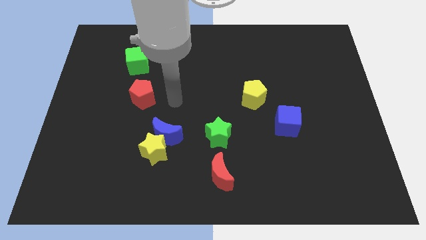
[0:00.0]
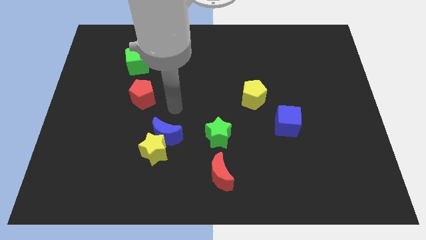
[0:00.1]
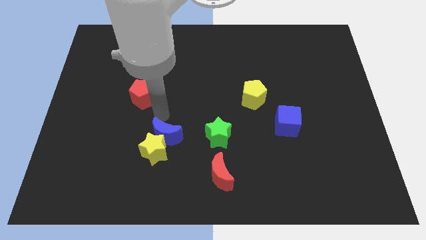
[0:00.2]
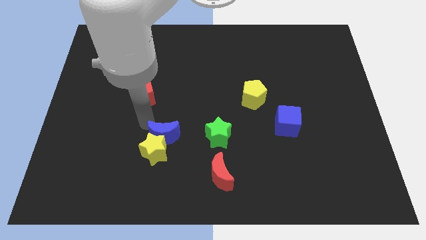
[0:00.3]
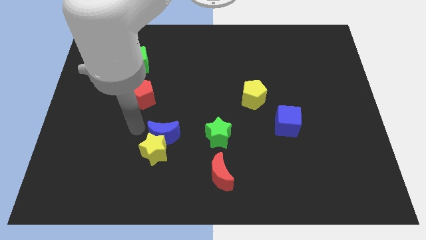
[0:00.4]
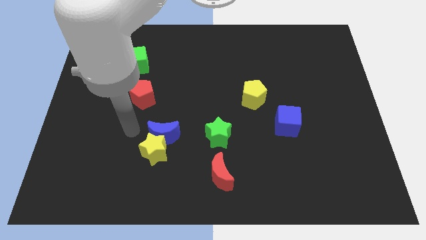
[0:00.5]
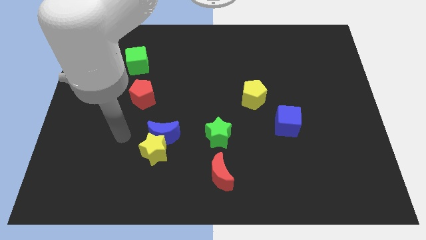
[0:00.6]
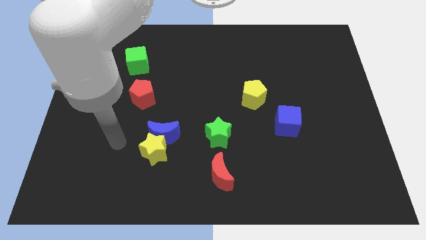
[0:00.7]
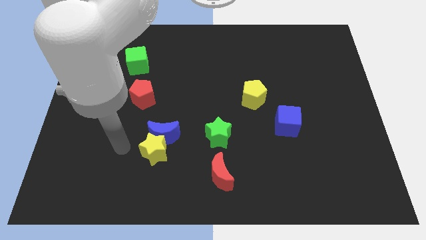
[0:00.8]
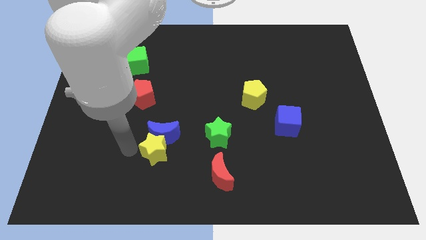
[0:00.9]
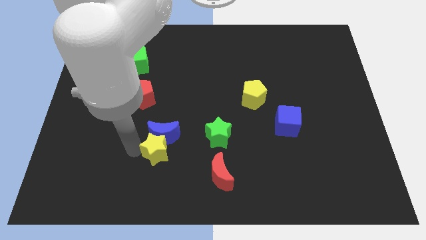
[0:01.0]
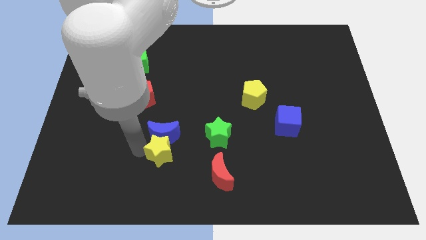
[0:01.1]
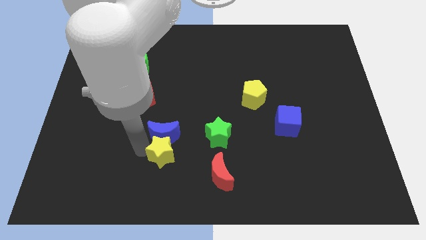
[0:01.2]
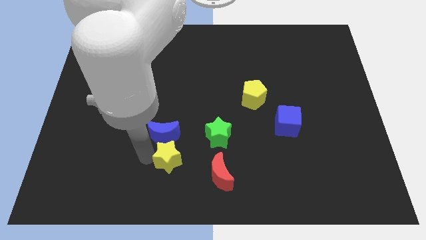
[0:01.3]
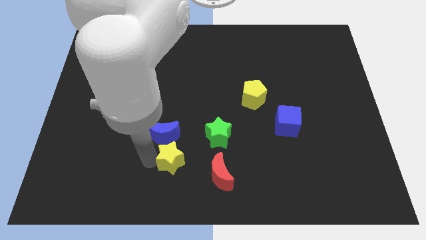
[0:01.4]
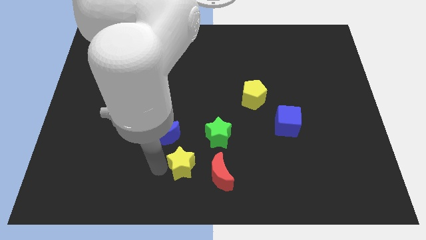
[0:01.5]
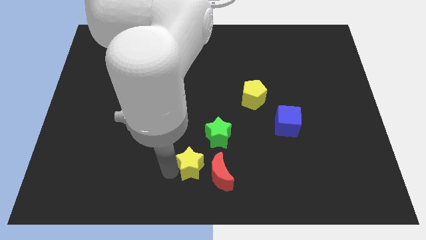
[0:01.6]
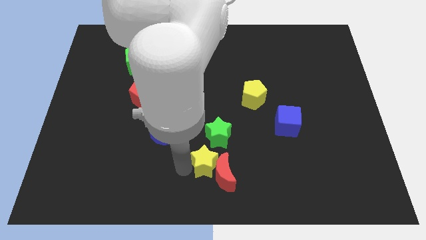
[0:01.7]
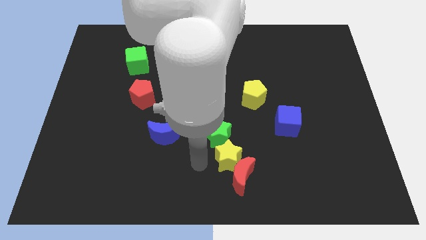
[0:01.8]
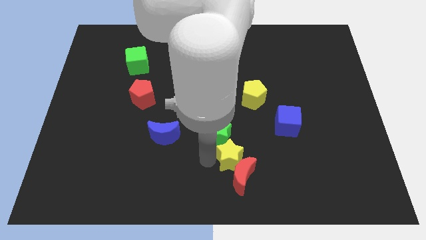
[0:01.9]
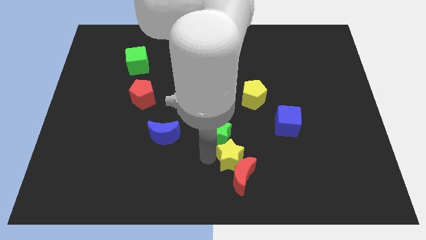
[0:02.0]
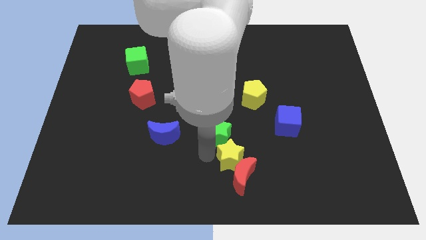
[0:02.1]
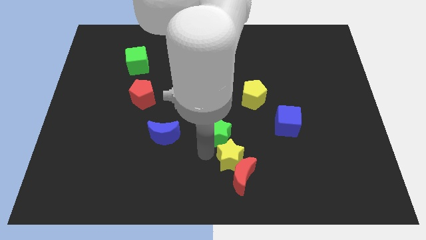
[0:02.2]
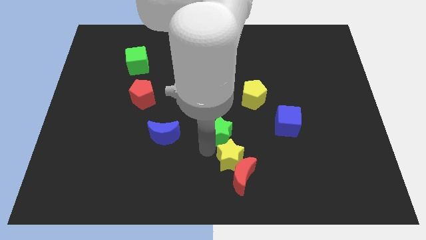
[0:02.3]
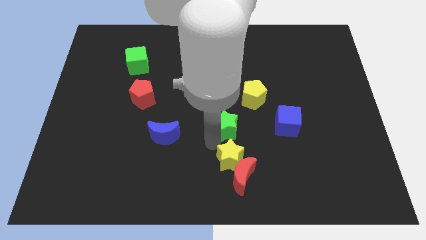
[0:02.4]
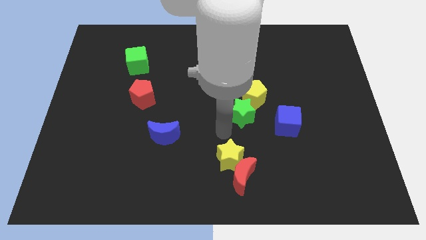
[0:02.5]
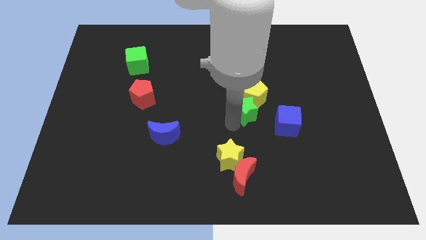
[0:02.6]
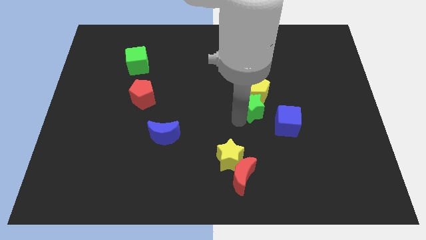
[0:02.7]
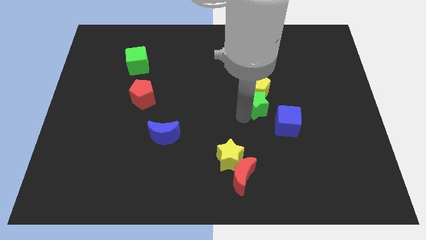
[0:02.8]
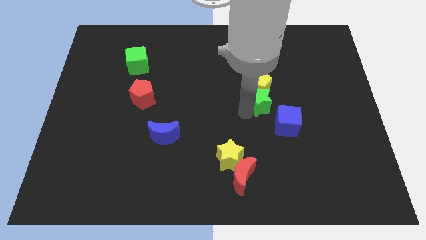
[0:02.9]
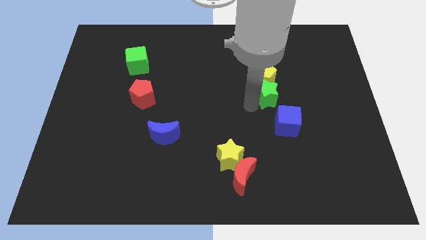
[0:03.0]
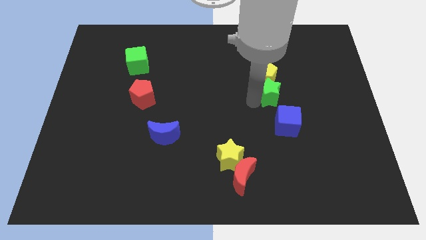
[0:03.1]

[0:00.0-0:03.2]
separate green star away from yellow star

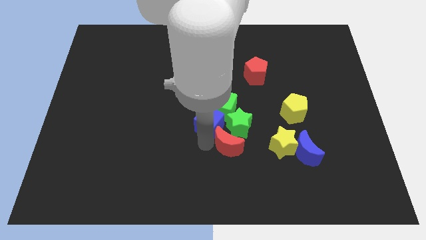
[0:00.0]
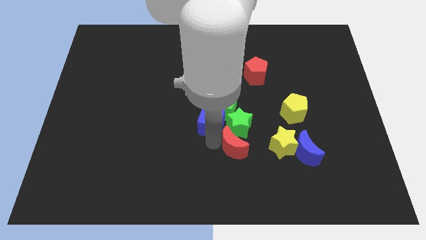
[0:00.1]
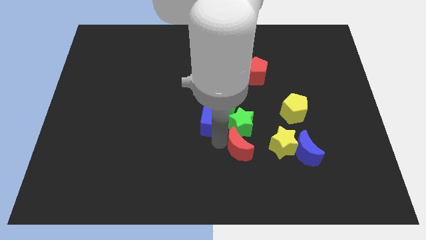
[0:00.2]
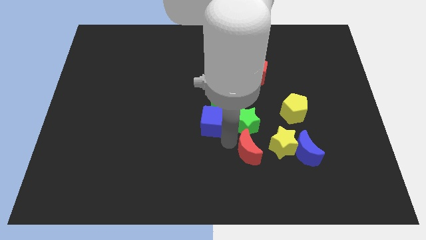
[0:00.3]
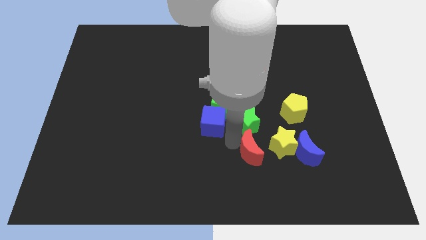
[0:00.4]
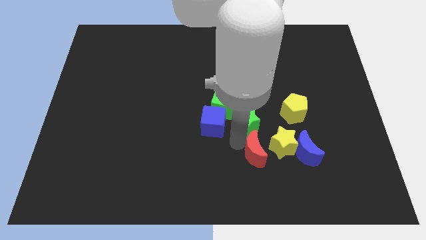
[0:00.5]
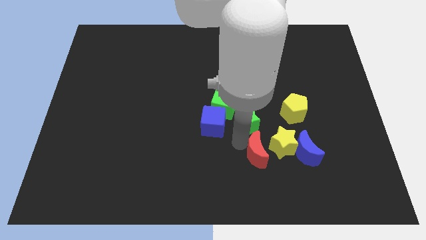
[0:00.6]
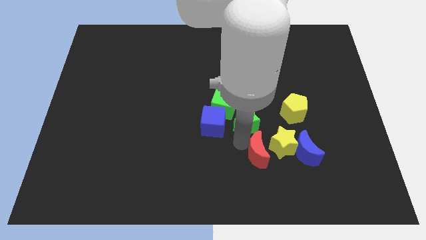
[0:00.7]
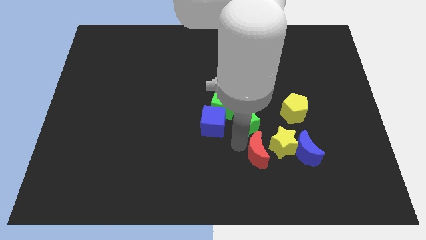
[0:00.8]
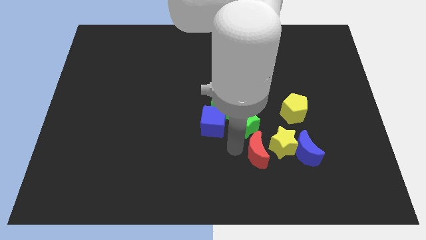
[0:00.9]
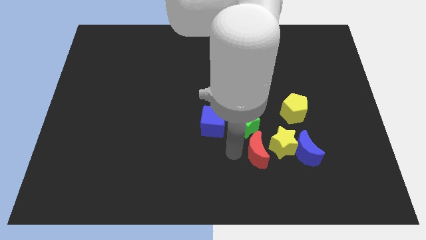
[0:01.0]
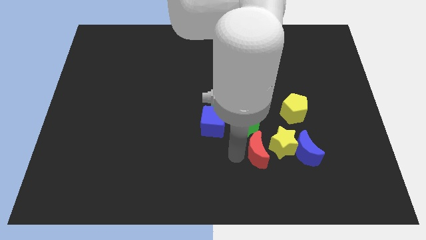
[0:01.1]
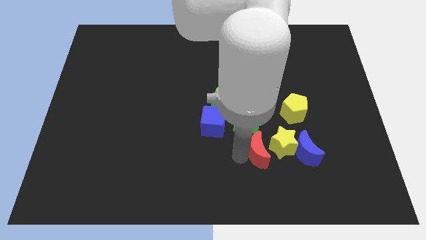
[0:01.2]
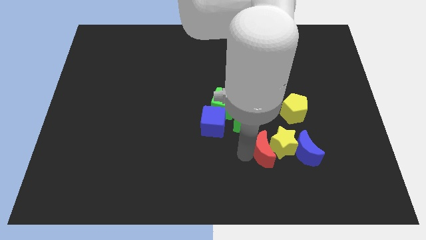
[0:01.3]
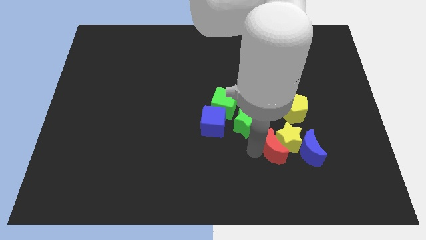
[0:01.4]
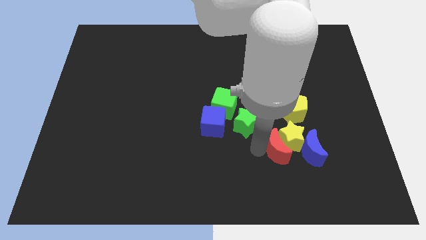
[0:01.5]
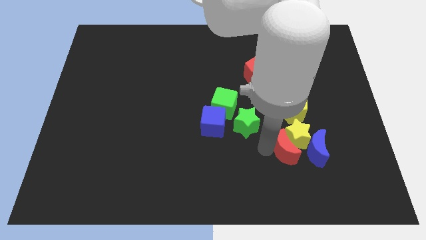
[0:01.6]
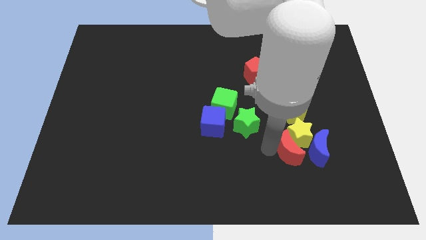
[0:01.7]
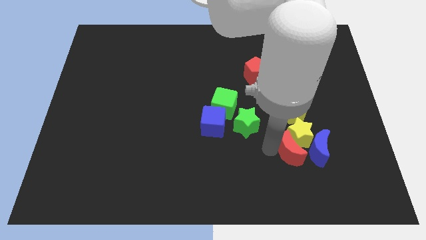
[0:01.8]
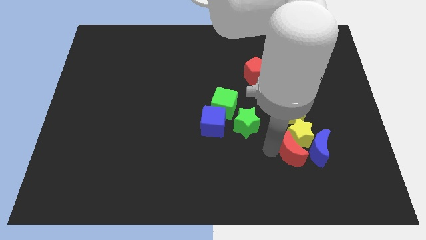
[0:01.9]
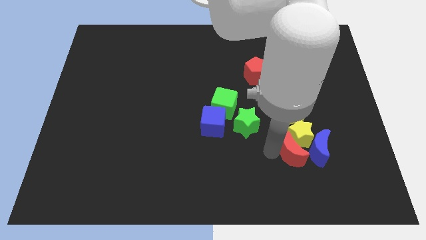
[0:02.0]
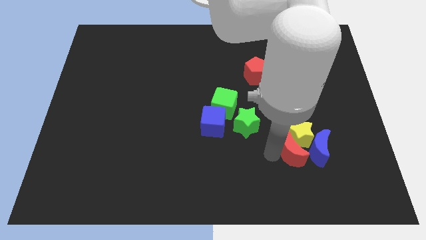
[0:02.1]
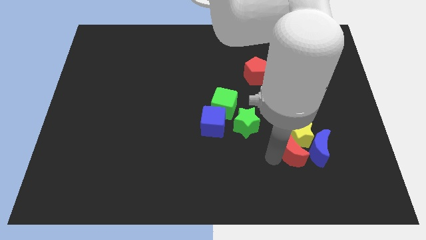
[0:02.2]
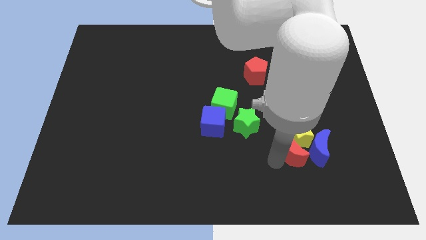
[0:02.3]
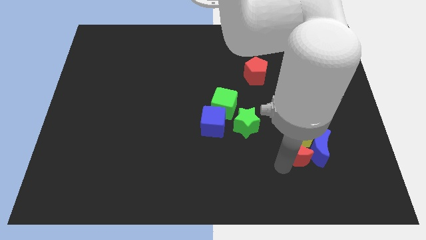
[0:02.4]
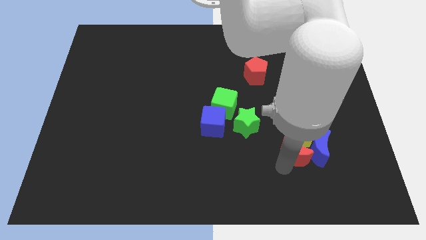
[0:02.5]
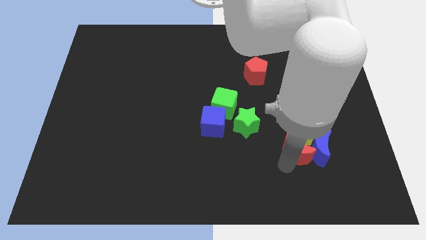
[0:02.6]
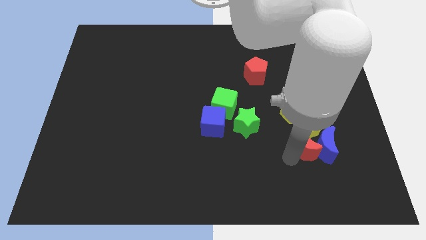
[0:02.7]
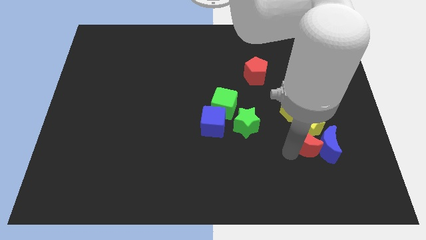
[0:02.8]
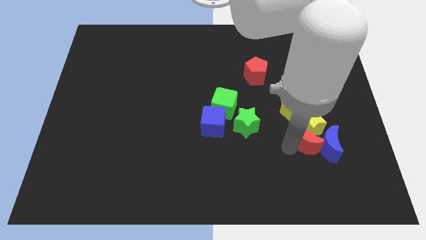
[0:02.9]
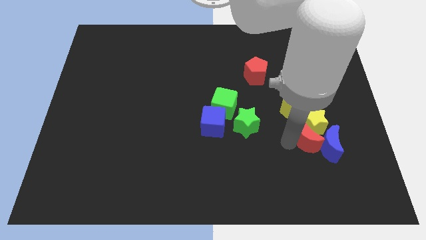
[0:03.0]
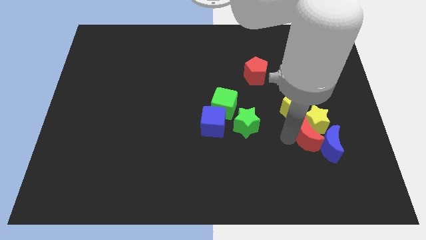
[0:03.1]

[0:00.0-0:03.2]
push red crescent and yellow star to the right side of the board

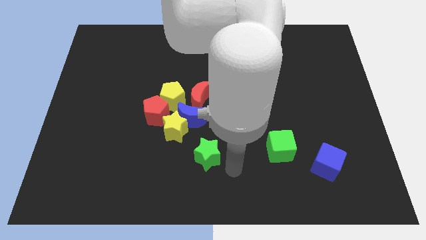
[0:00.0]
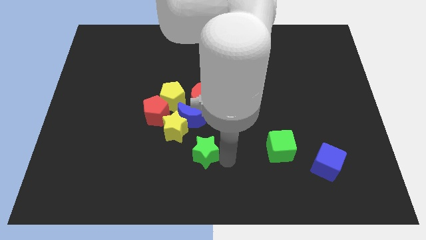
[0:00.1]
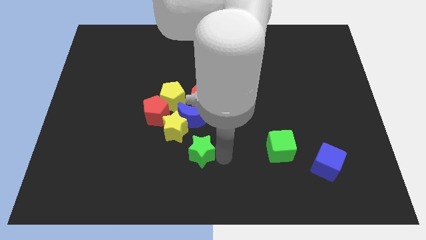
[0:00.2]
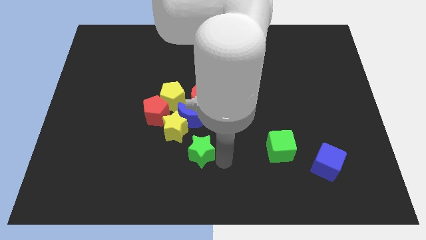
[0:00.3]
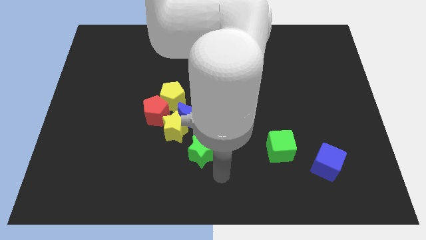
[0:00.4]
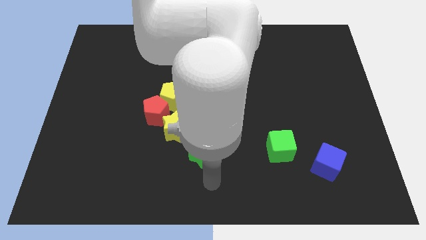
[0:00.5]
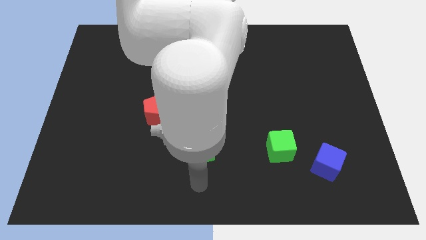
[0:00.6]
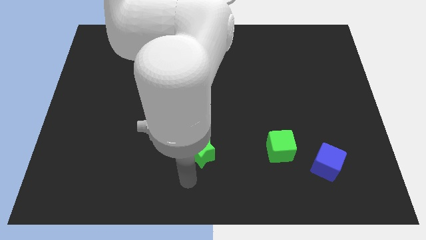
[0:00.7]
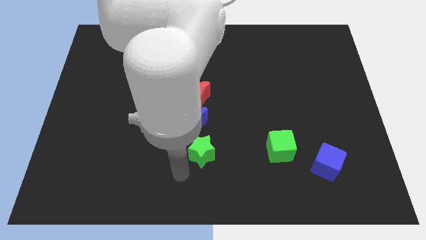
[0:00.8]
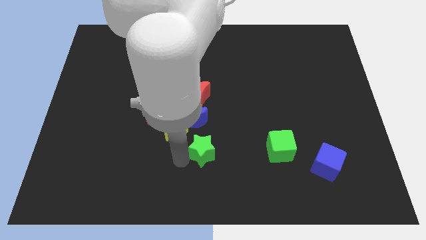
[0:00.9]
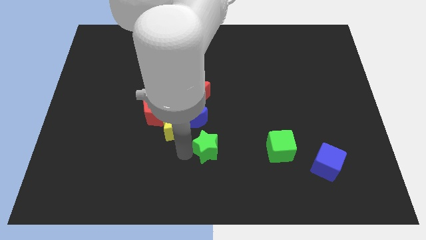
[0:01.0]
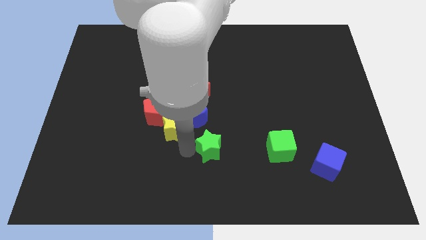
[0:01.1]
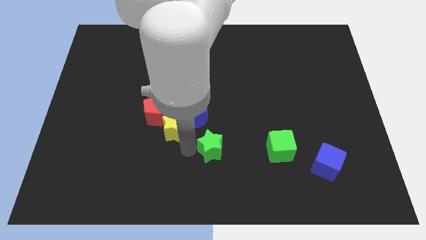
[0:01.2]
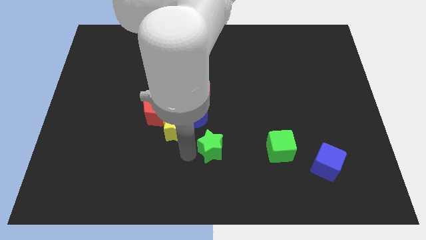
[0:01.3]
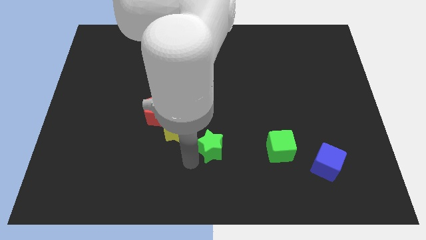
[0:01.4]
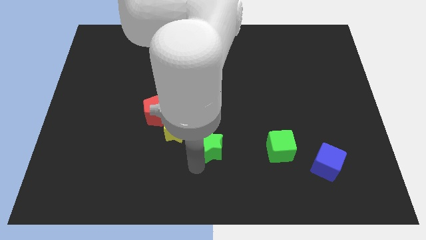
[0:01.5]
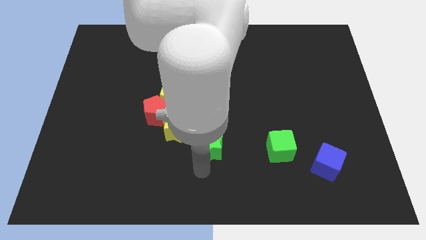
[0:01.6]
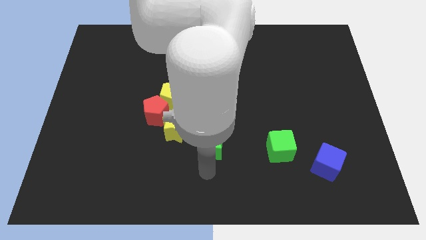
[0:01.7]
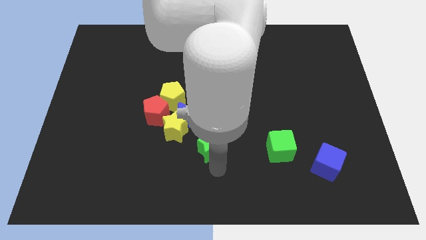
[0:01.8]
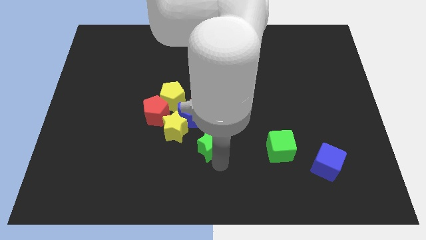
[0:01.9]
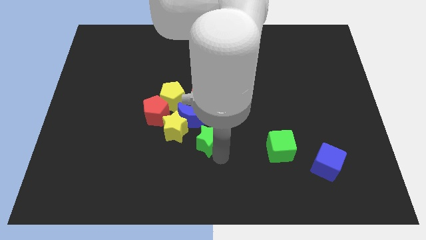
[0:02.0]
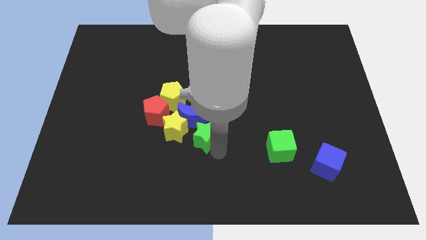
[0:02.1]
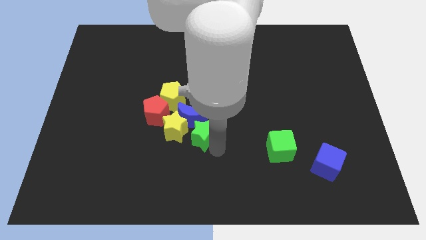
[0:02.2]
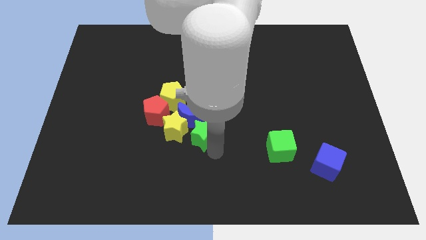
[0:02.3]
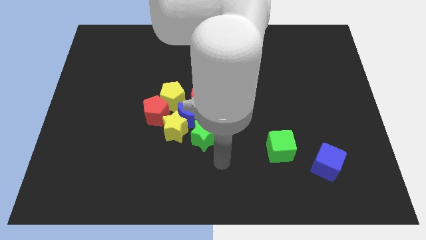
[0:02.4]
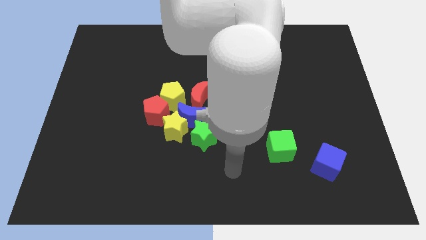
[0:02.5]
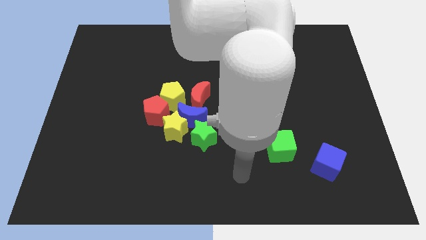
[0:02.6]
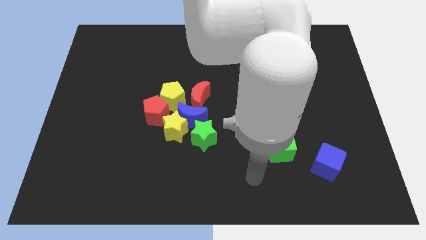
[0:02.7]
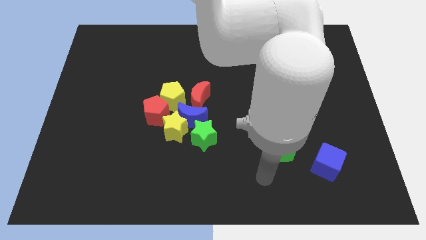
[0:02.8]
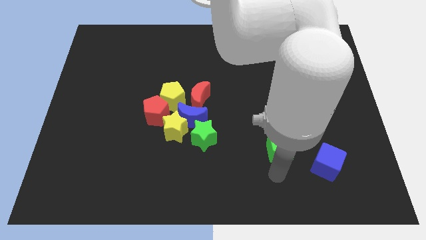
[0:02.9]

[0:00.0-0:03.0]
place green star adjacent to yellow star
